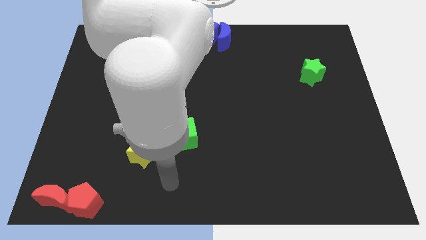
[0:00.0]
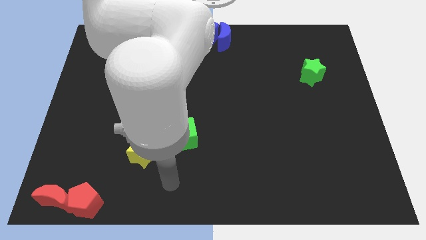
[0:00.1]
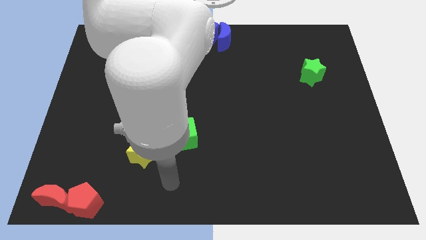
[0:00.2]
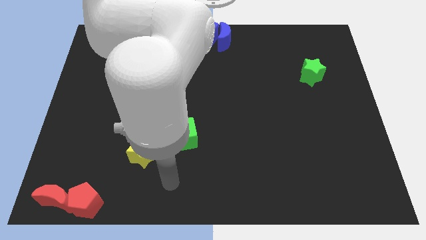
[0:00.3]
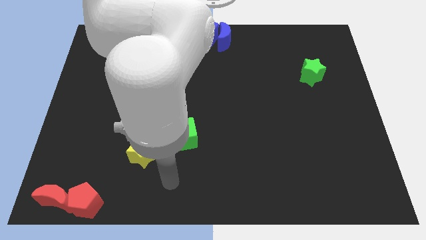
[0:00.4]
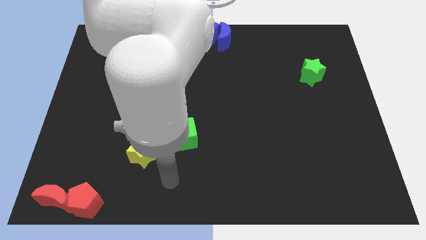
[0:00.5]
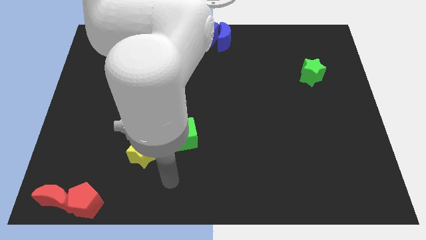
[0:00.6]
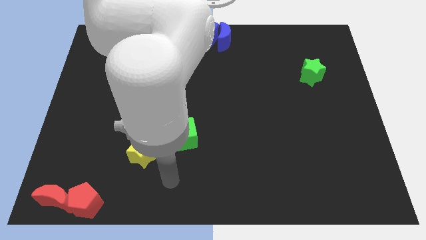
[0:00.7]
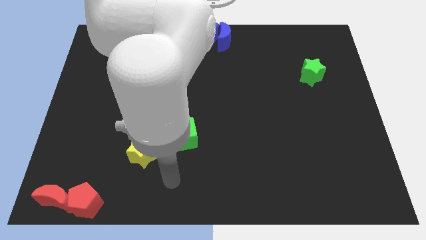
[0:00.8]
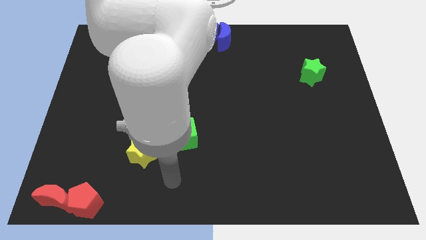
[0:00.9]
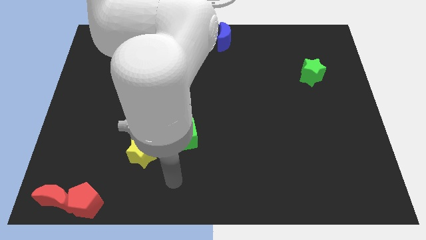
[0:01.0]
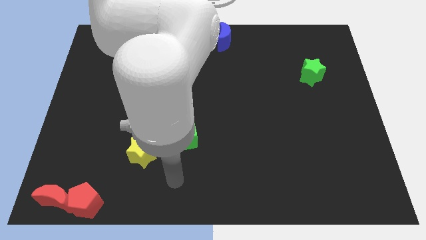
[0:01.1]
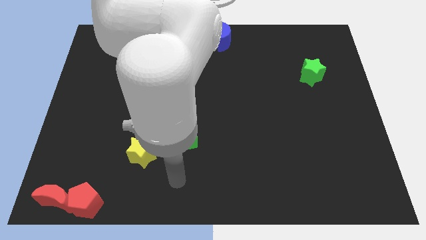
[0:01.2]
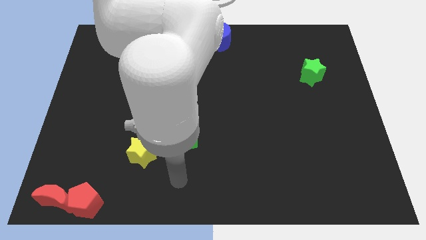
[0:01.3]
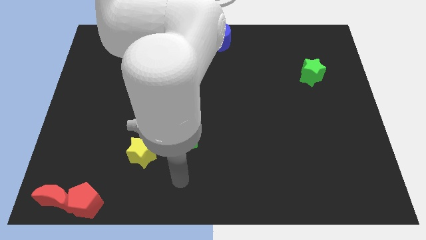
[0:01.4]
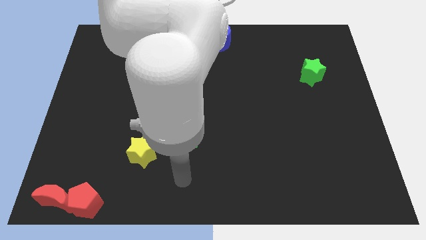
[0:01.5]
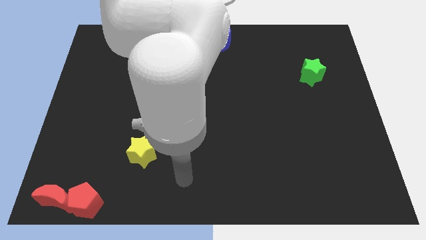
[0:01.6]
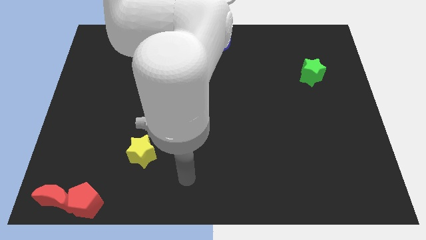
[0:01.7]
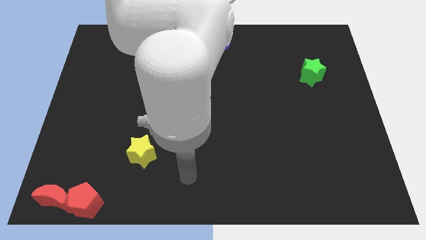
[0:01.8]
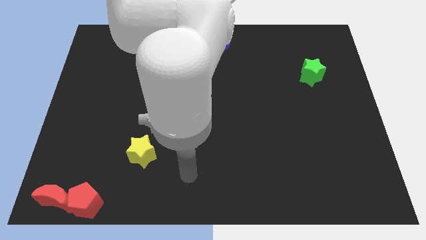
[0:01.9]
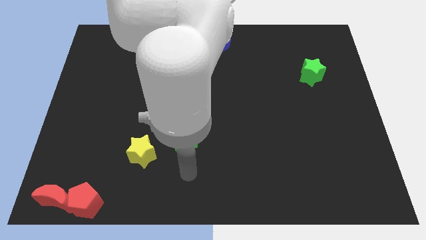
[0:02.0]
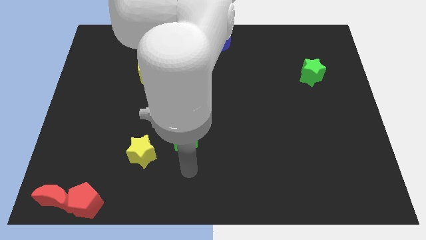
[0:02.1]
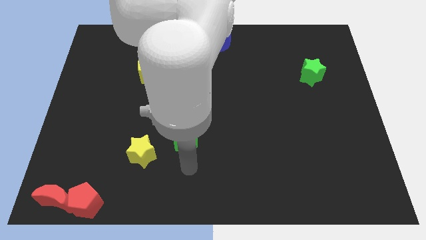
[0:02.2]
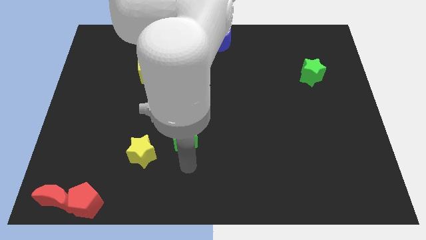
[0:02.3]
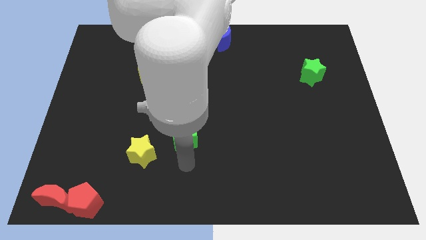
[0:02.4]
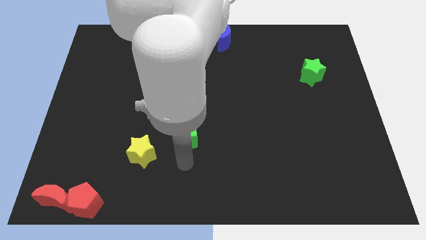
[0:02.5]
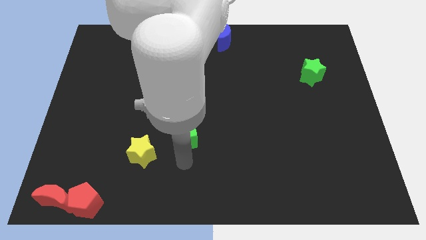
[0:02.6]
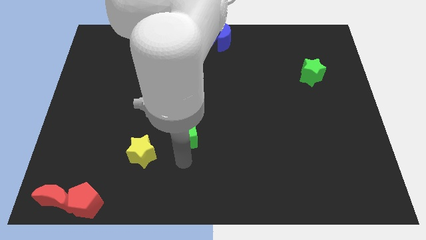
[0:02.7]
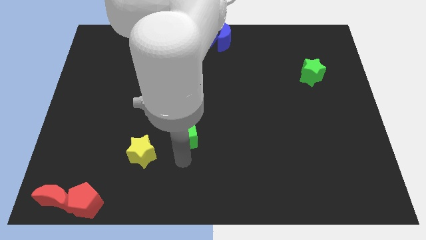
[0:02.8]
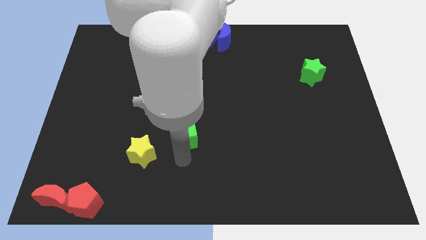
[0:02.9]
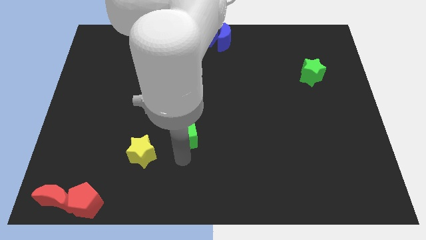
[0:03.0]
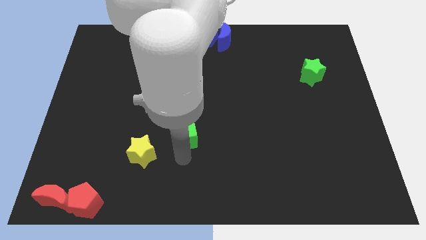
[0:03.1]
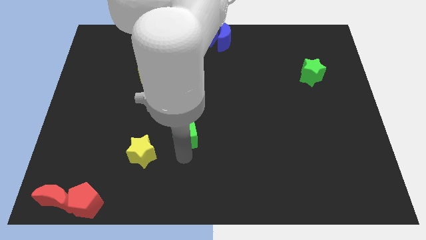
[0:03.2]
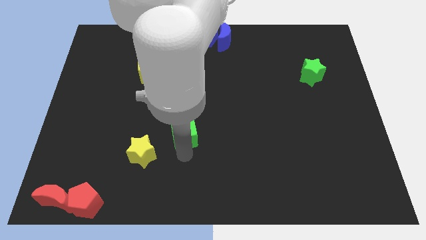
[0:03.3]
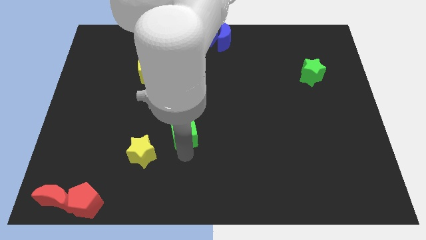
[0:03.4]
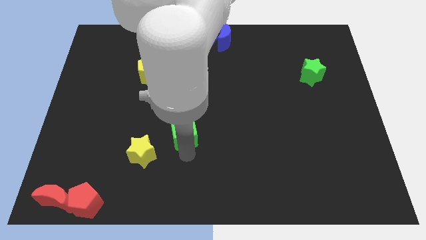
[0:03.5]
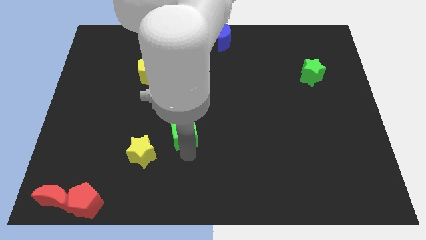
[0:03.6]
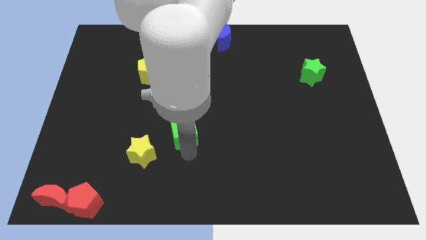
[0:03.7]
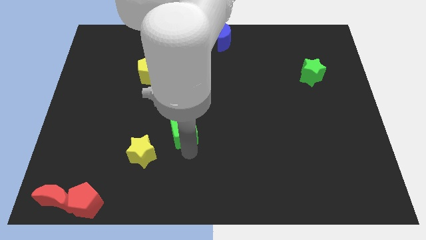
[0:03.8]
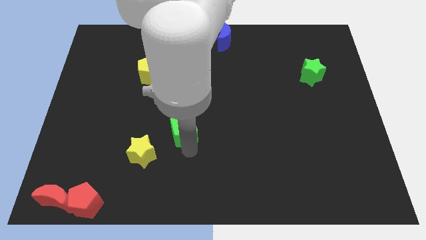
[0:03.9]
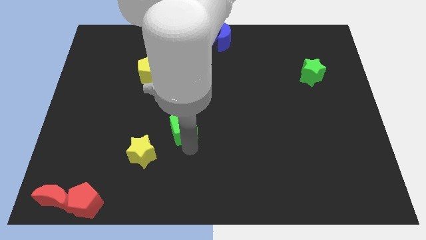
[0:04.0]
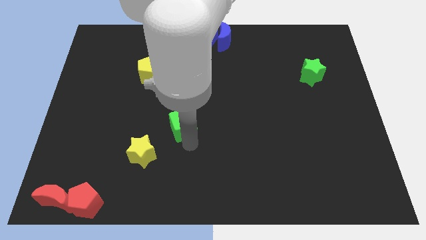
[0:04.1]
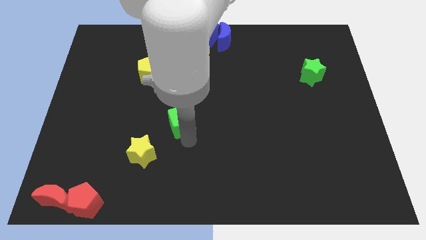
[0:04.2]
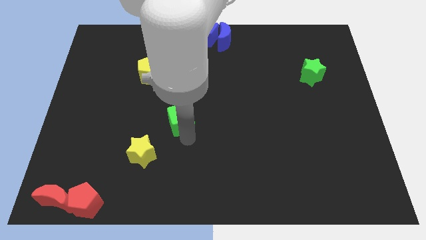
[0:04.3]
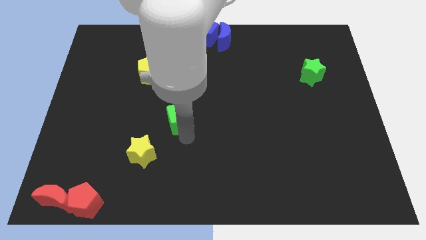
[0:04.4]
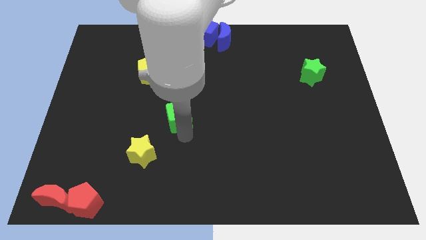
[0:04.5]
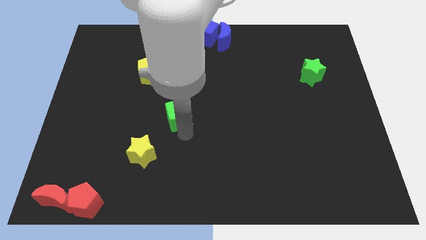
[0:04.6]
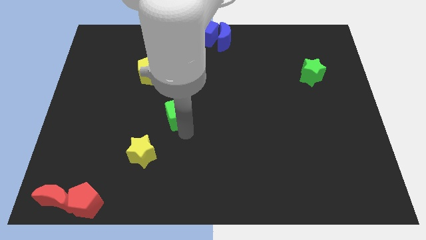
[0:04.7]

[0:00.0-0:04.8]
push the green cube to the top side of the board

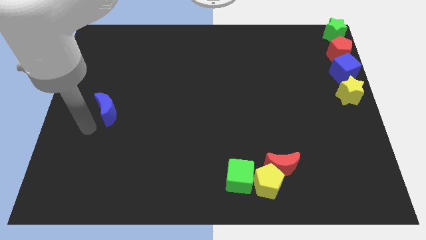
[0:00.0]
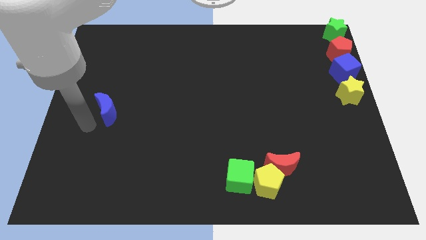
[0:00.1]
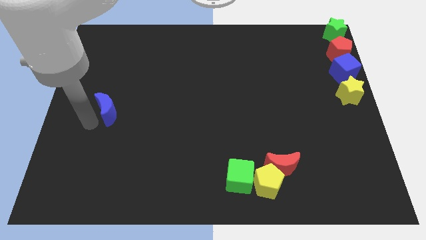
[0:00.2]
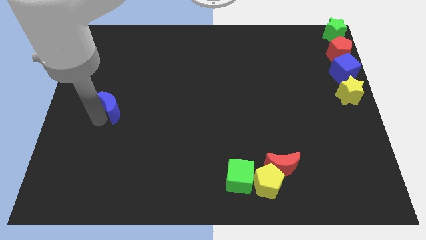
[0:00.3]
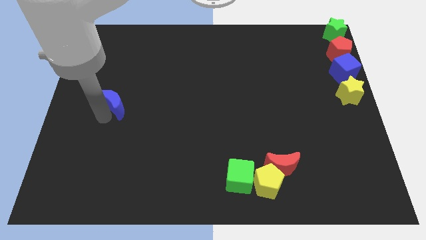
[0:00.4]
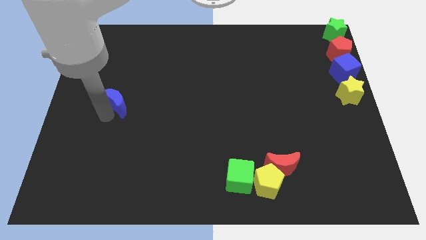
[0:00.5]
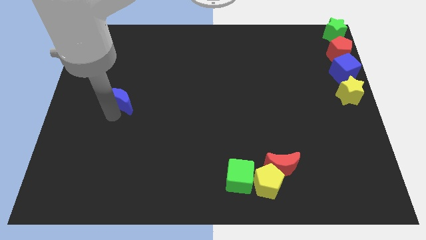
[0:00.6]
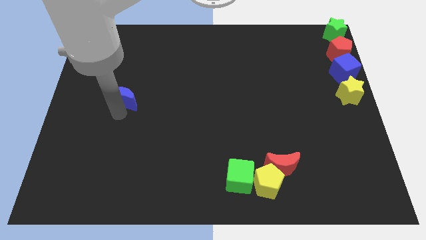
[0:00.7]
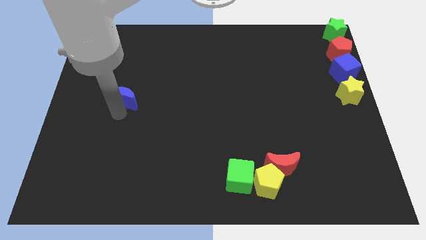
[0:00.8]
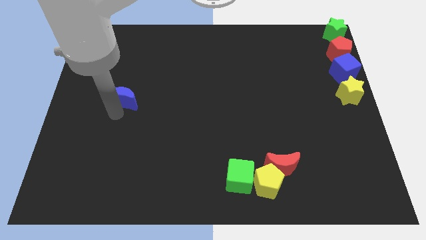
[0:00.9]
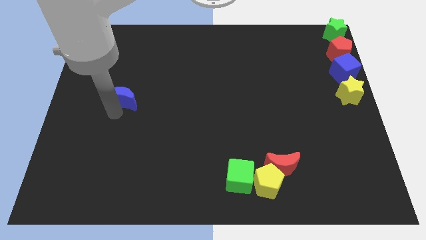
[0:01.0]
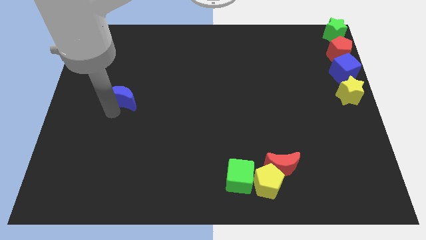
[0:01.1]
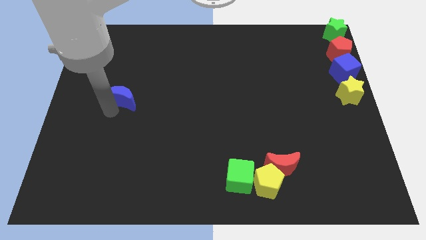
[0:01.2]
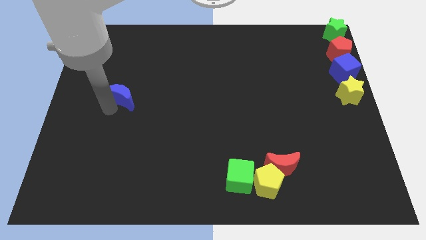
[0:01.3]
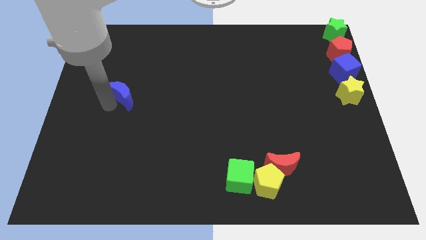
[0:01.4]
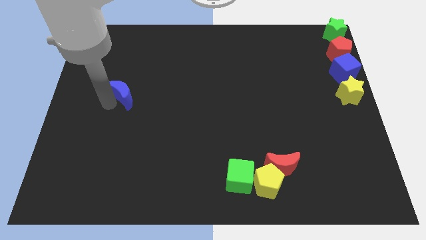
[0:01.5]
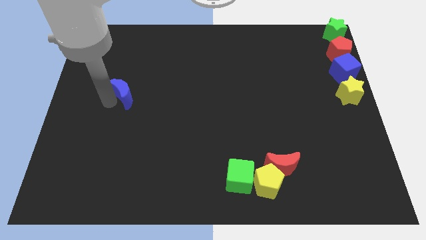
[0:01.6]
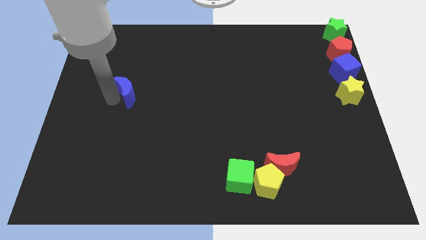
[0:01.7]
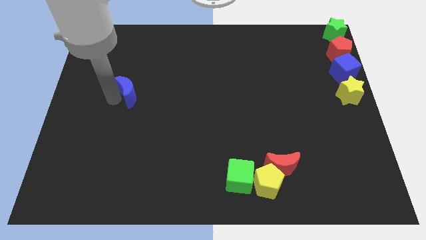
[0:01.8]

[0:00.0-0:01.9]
slightly move the blue crescent towards the left of the board

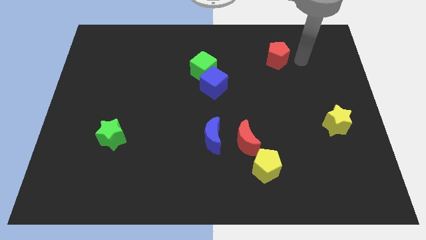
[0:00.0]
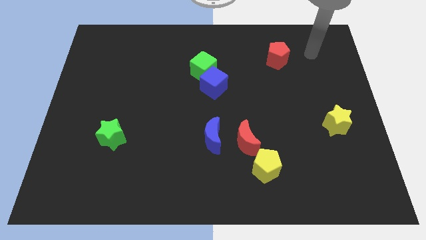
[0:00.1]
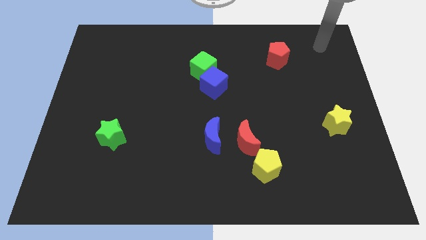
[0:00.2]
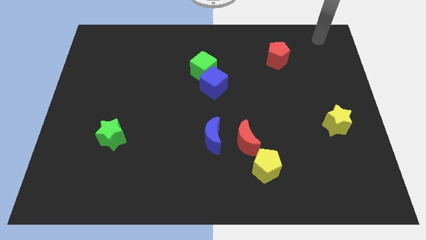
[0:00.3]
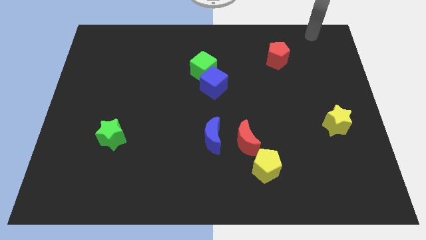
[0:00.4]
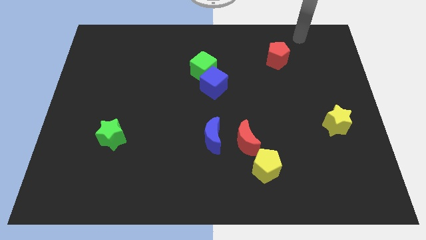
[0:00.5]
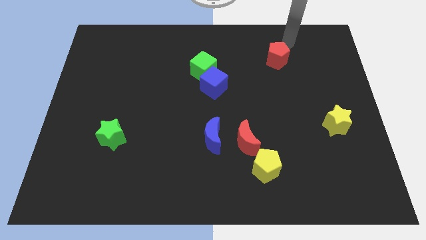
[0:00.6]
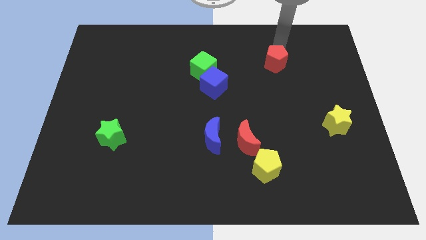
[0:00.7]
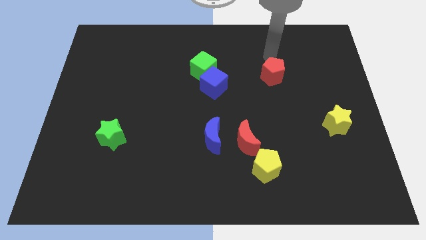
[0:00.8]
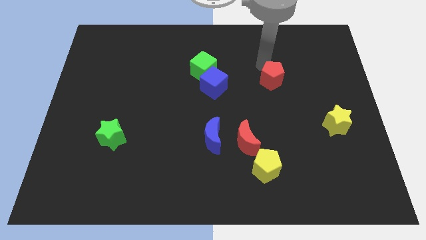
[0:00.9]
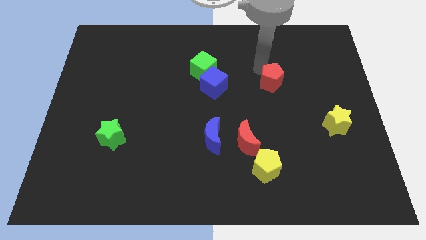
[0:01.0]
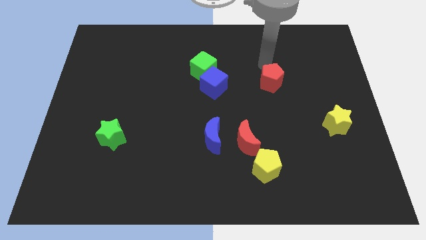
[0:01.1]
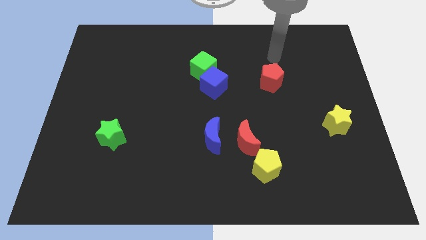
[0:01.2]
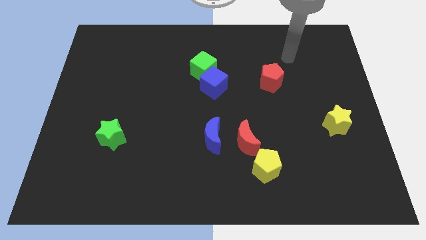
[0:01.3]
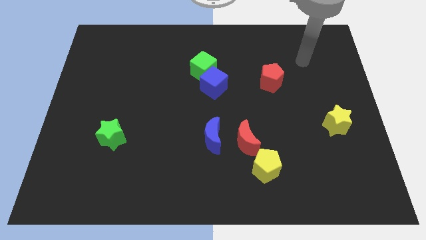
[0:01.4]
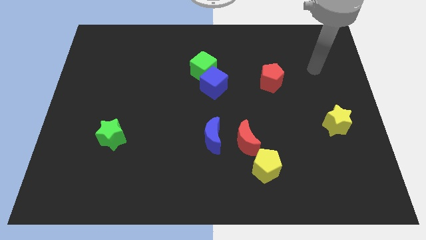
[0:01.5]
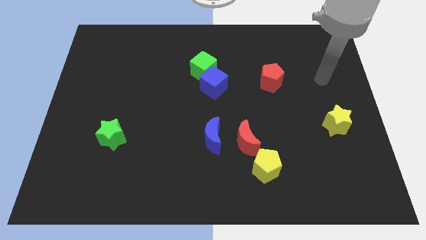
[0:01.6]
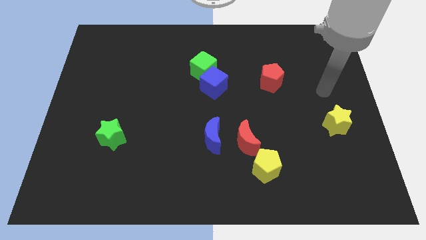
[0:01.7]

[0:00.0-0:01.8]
place the red pentagon horizontally to the right side of the blue cube

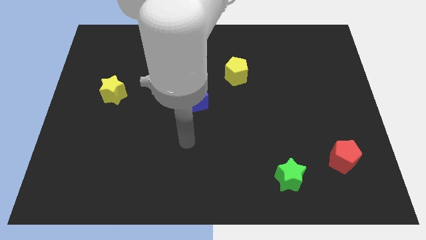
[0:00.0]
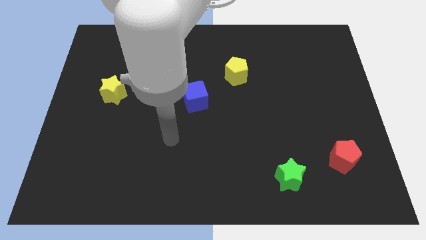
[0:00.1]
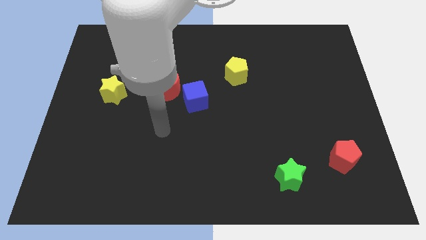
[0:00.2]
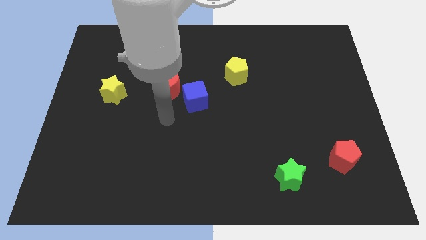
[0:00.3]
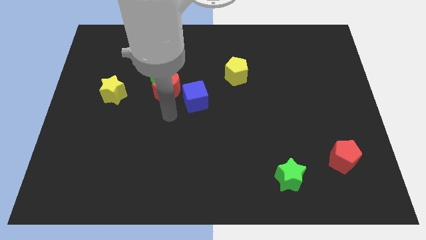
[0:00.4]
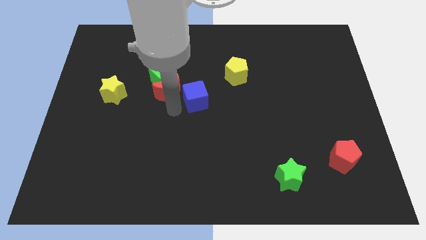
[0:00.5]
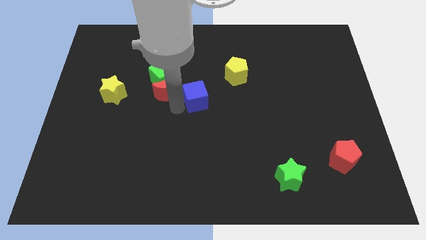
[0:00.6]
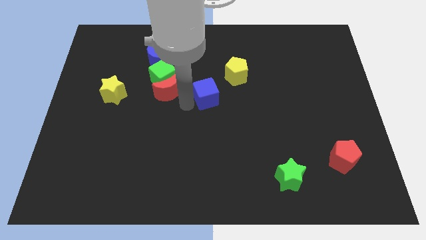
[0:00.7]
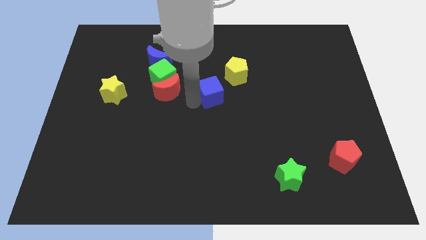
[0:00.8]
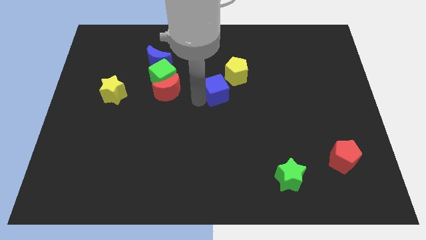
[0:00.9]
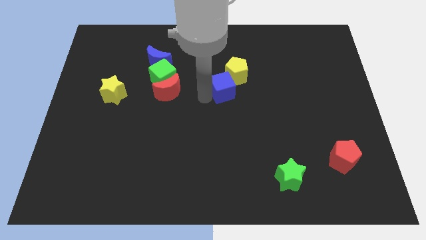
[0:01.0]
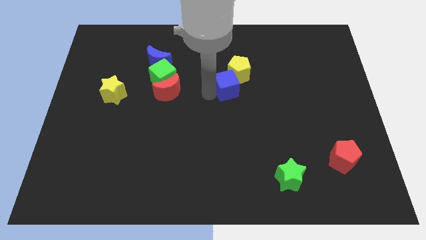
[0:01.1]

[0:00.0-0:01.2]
move the blue cube close to the bottom left of the yellow pentagon
